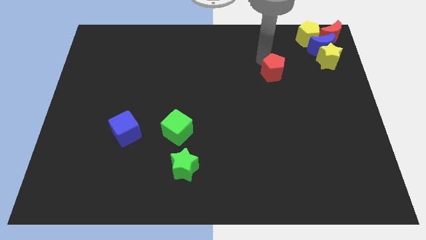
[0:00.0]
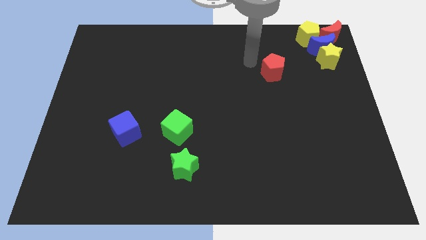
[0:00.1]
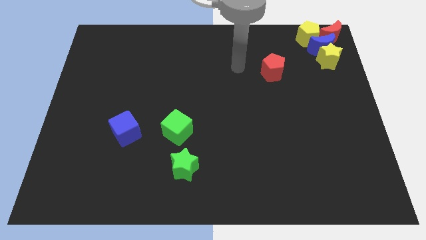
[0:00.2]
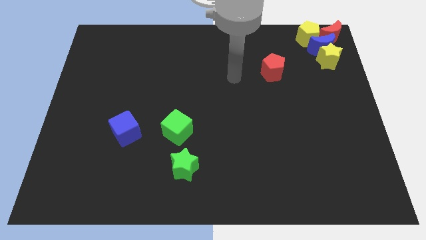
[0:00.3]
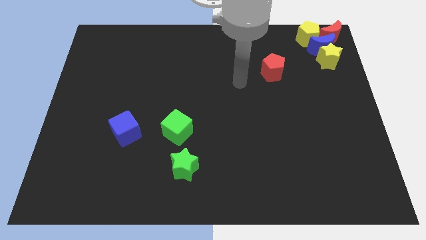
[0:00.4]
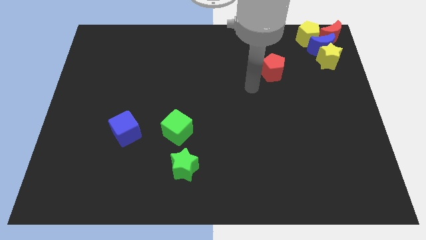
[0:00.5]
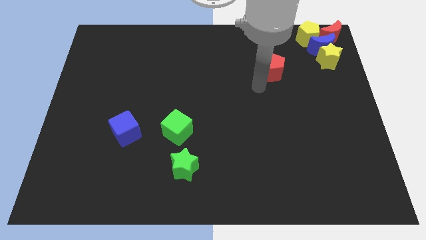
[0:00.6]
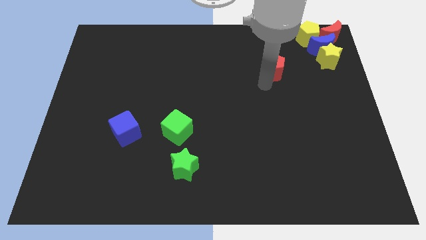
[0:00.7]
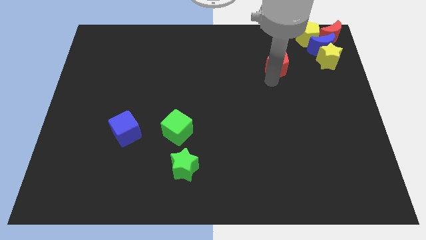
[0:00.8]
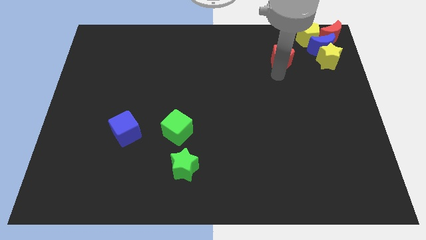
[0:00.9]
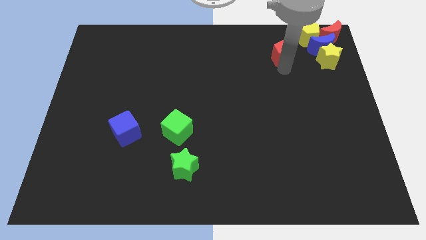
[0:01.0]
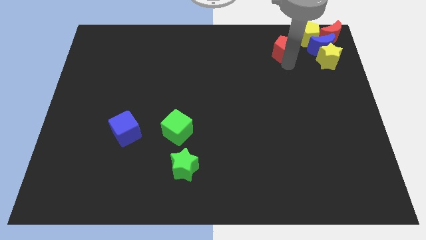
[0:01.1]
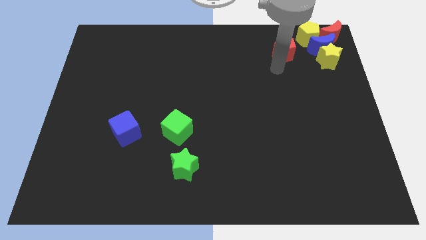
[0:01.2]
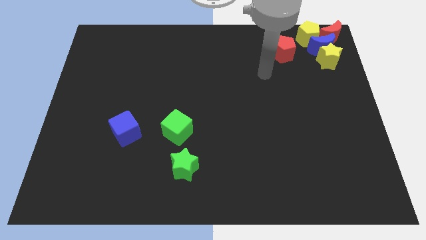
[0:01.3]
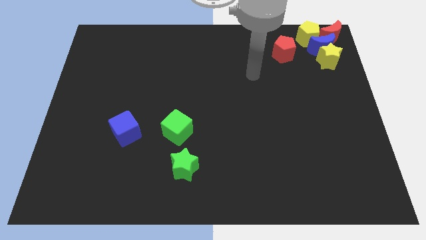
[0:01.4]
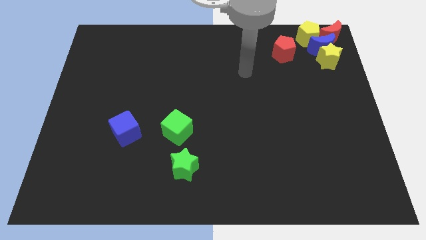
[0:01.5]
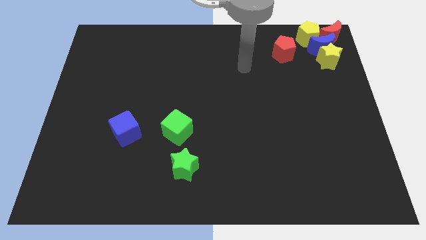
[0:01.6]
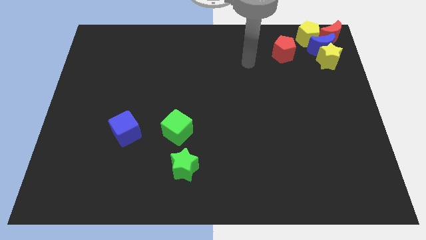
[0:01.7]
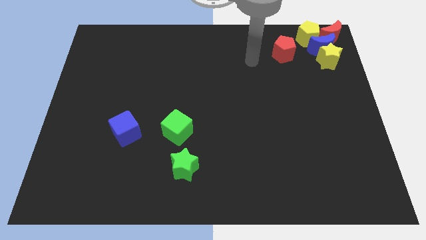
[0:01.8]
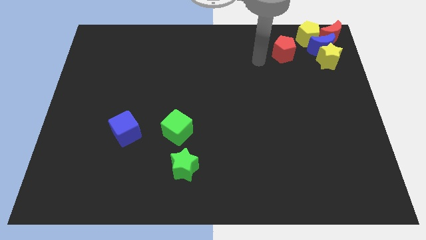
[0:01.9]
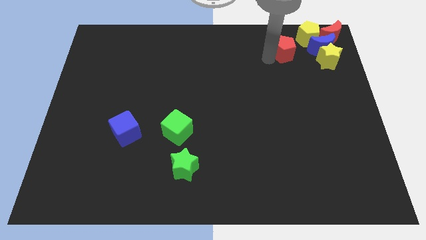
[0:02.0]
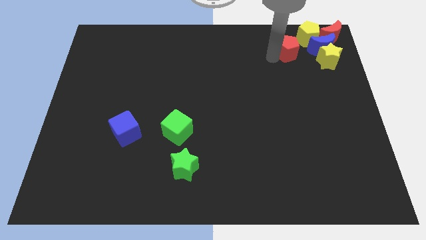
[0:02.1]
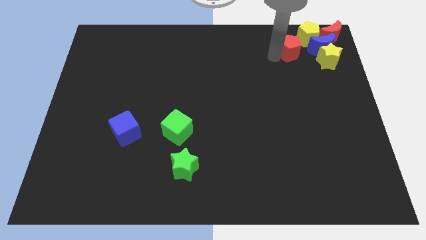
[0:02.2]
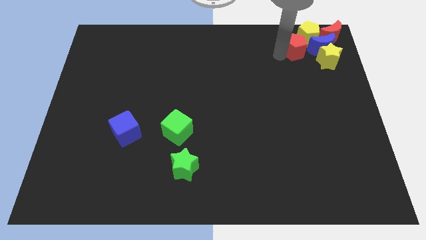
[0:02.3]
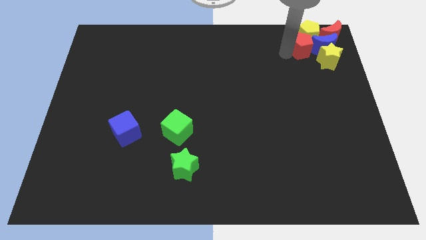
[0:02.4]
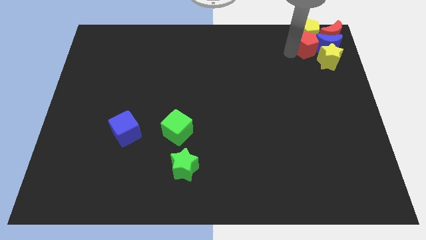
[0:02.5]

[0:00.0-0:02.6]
push the red pentagon into the blue crescent

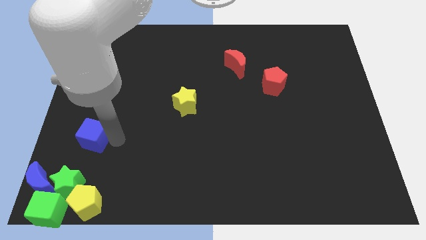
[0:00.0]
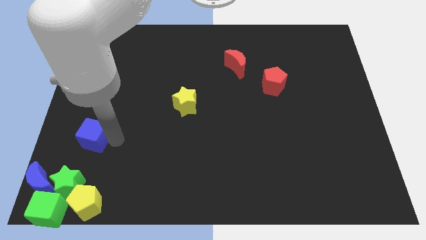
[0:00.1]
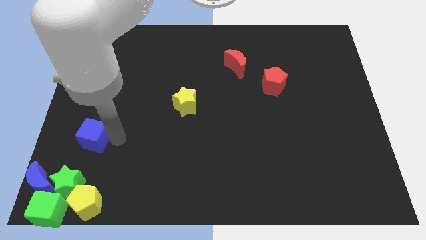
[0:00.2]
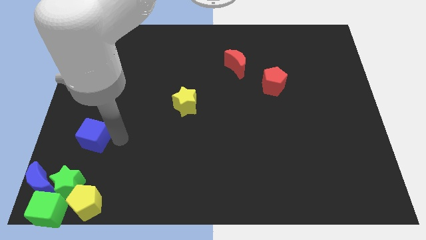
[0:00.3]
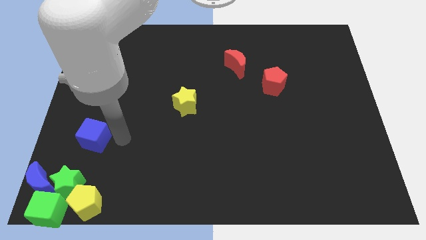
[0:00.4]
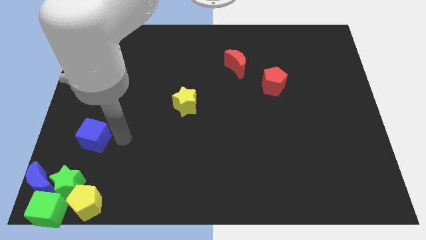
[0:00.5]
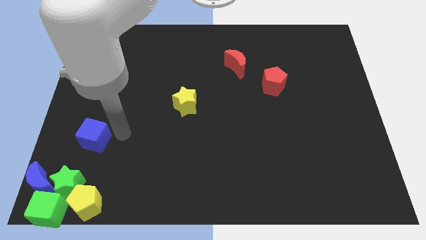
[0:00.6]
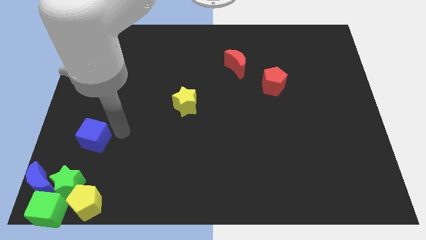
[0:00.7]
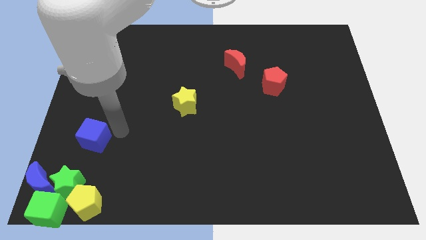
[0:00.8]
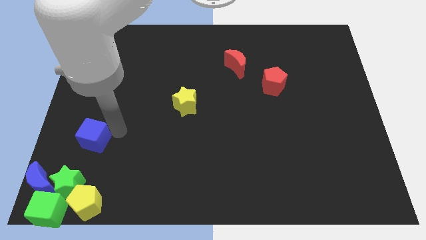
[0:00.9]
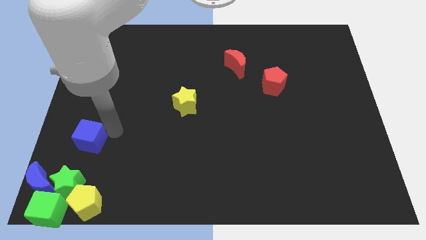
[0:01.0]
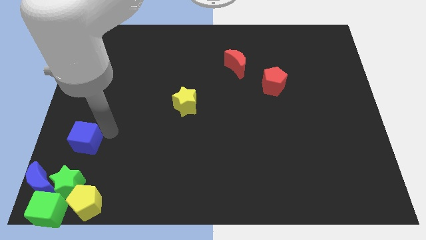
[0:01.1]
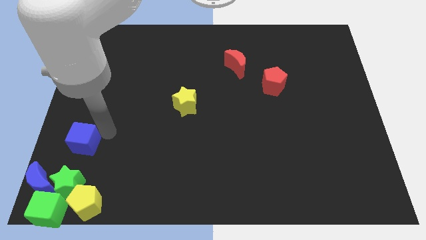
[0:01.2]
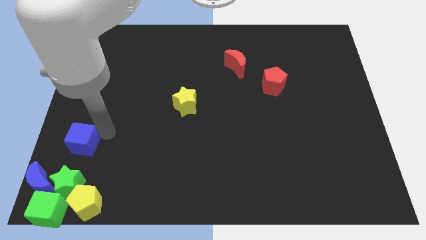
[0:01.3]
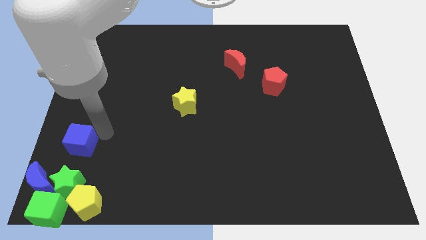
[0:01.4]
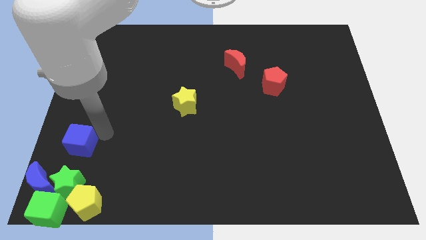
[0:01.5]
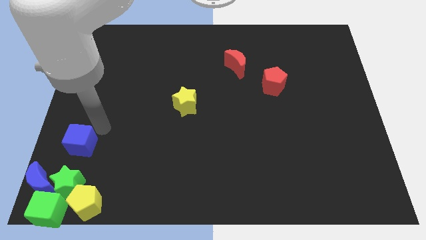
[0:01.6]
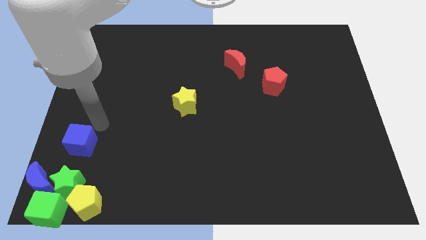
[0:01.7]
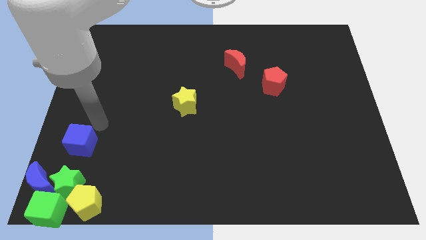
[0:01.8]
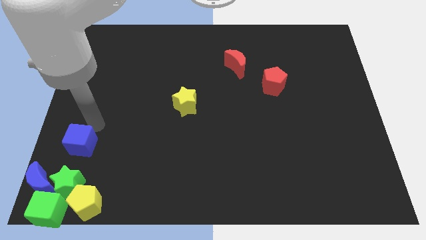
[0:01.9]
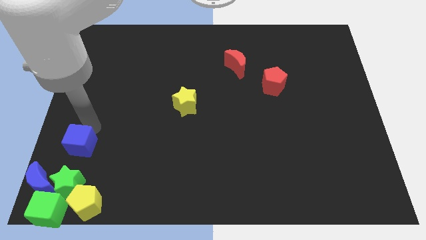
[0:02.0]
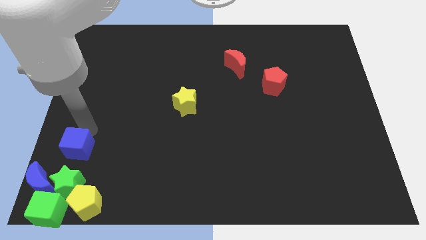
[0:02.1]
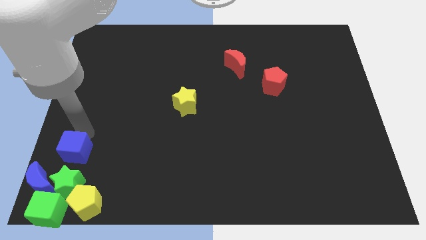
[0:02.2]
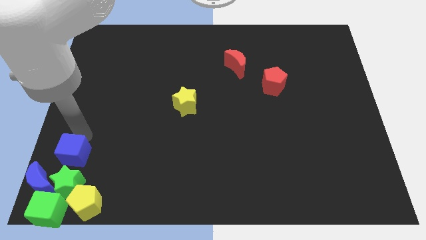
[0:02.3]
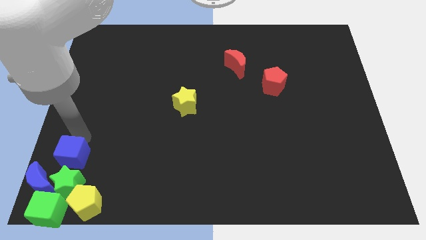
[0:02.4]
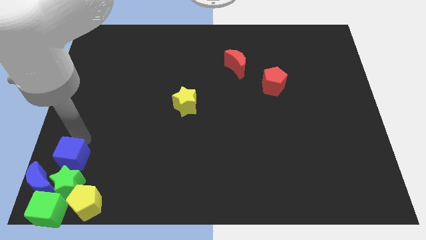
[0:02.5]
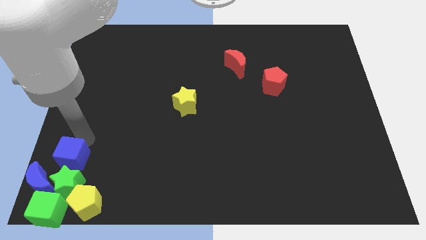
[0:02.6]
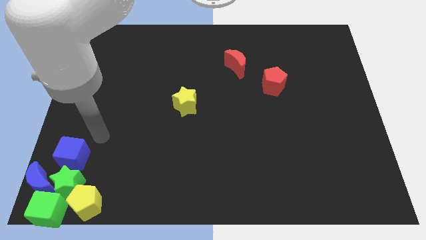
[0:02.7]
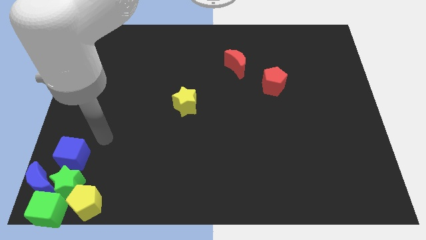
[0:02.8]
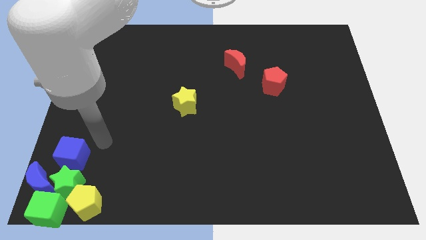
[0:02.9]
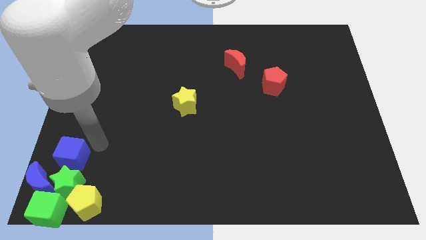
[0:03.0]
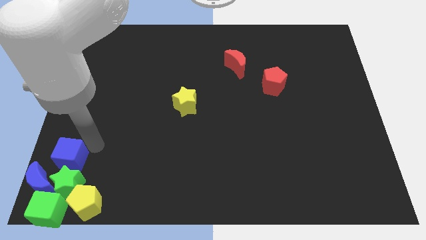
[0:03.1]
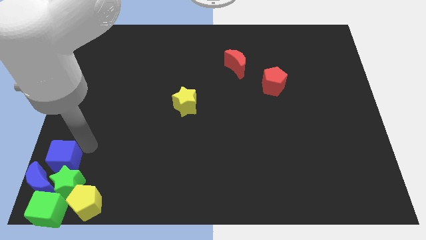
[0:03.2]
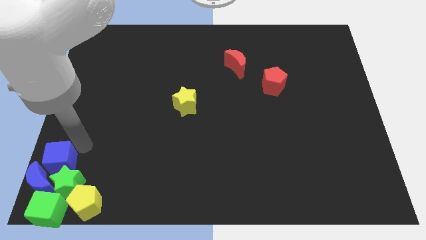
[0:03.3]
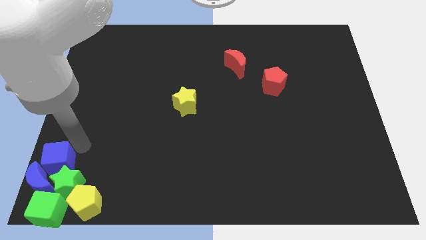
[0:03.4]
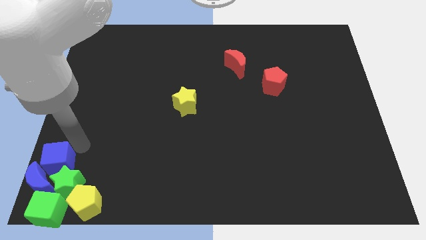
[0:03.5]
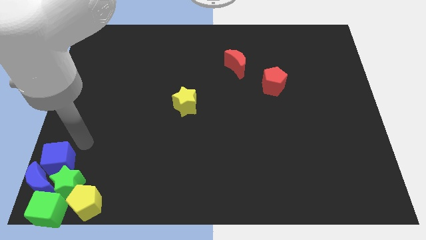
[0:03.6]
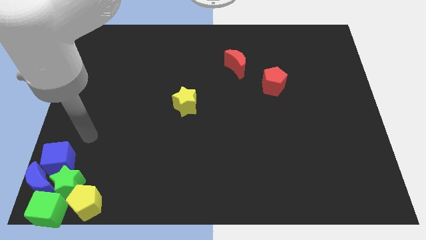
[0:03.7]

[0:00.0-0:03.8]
push the blue cube into the top side of the green star and blue moon

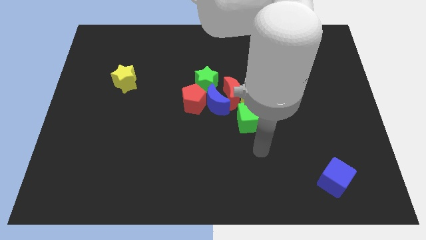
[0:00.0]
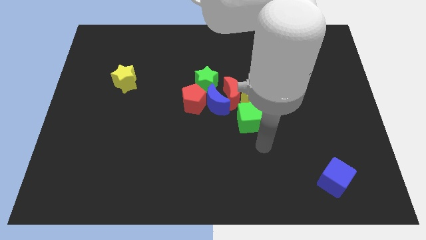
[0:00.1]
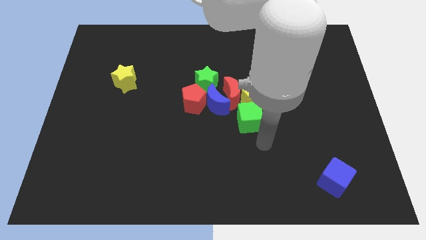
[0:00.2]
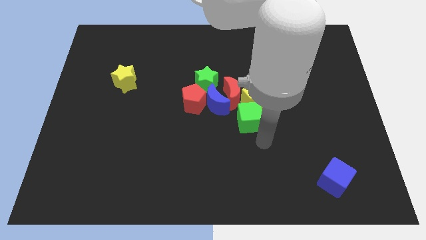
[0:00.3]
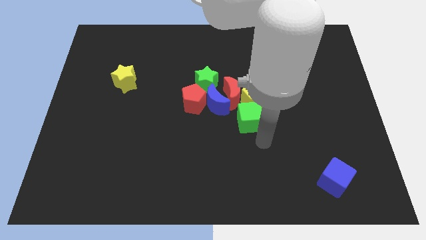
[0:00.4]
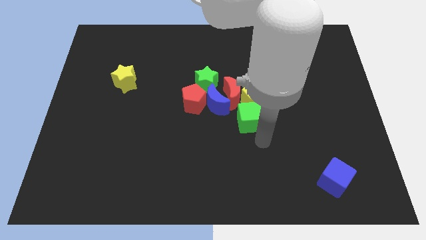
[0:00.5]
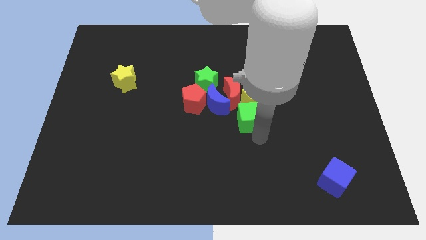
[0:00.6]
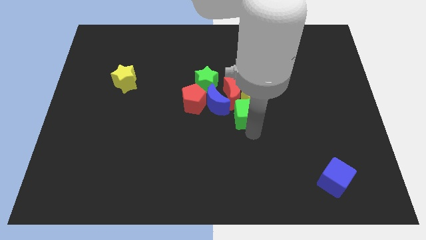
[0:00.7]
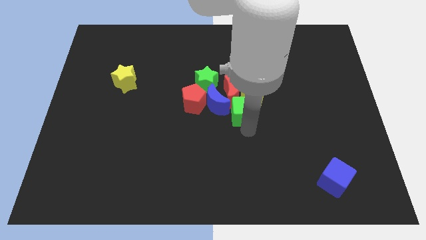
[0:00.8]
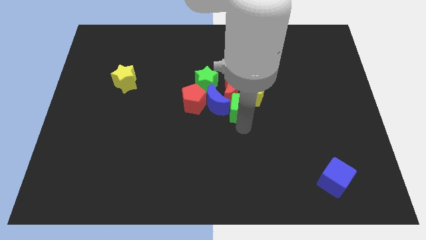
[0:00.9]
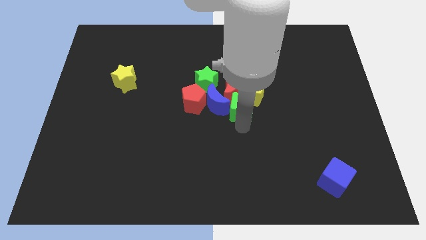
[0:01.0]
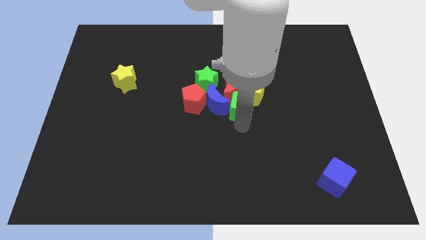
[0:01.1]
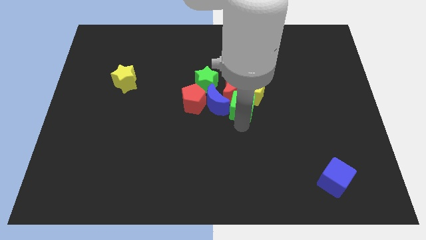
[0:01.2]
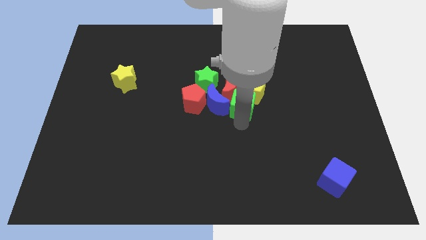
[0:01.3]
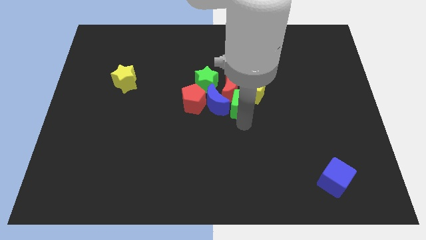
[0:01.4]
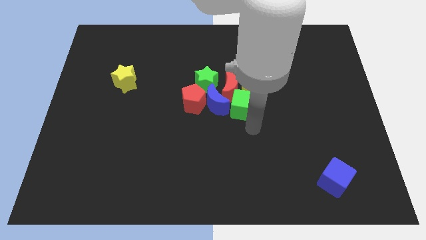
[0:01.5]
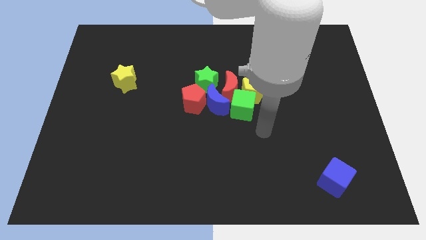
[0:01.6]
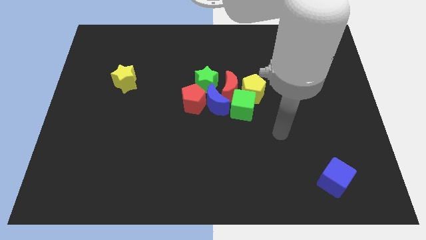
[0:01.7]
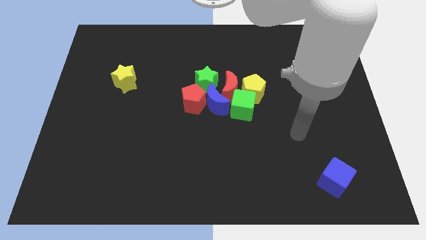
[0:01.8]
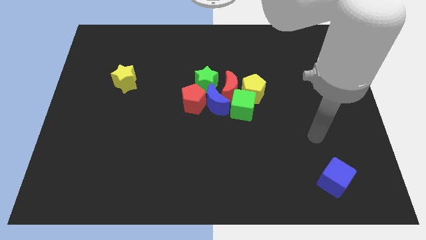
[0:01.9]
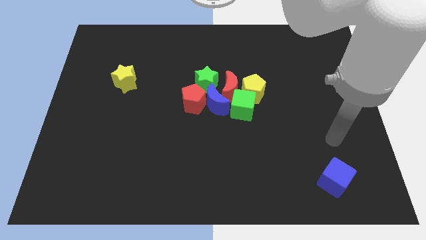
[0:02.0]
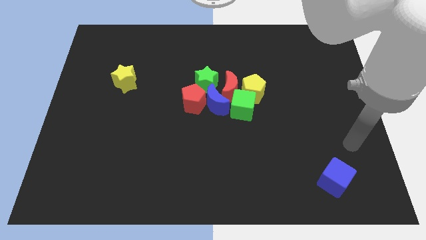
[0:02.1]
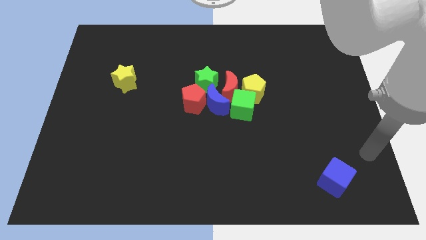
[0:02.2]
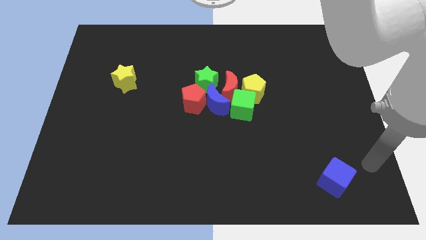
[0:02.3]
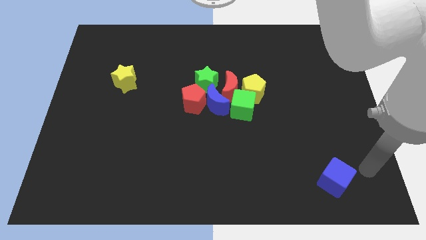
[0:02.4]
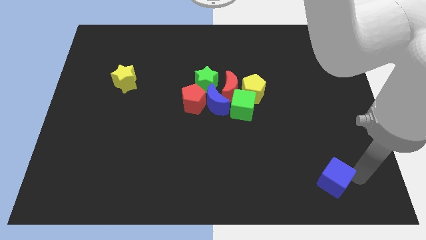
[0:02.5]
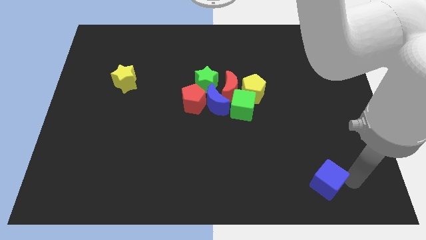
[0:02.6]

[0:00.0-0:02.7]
push the green cube into the group diagonally from the bottom right touching the blue moon
